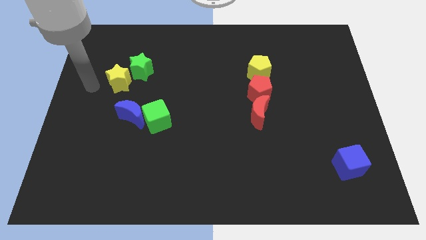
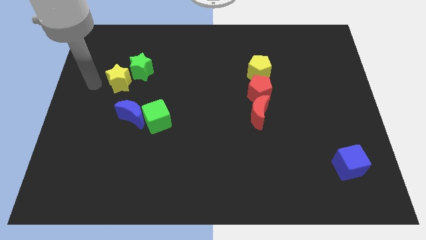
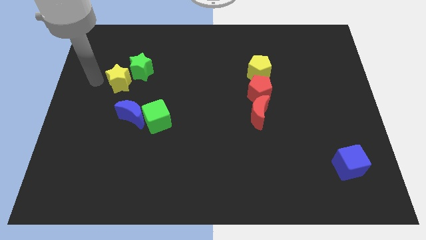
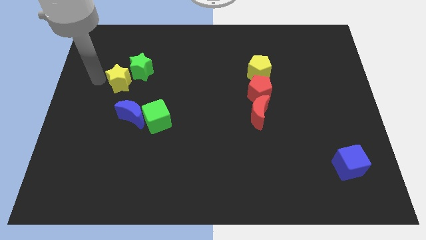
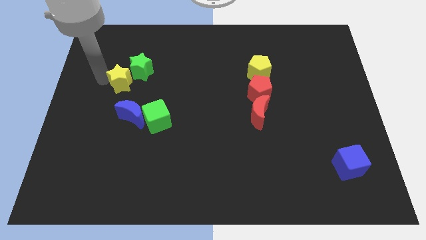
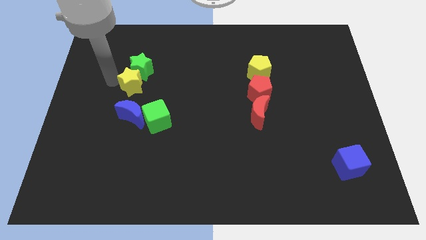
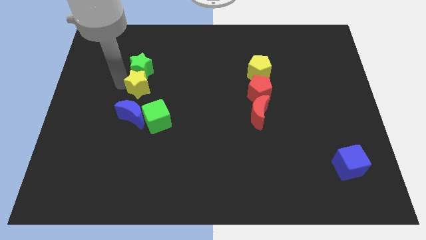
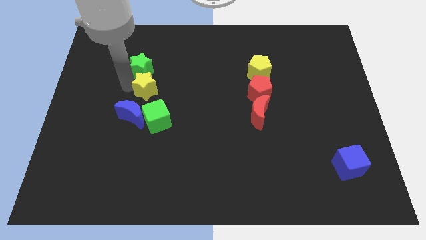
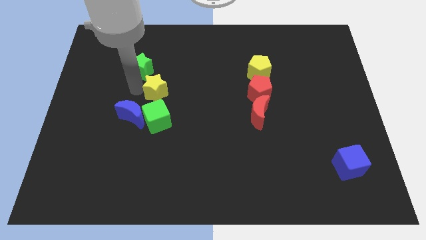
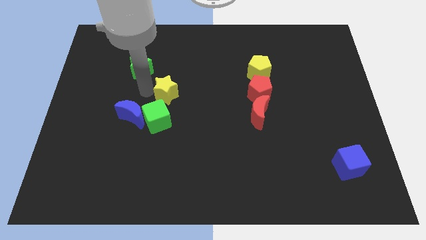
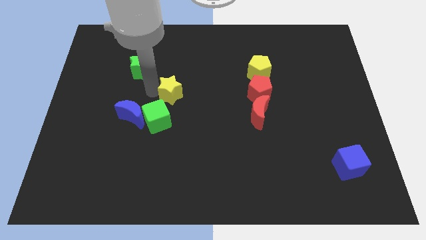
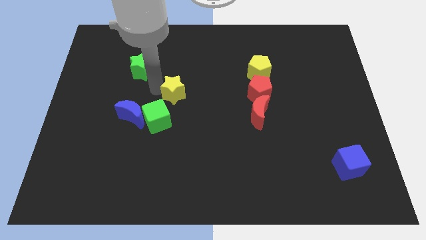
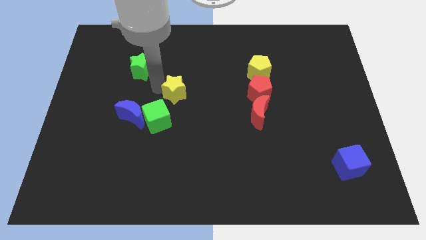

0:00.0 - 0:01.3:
take the yellow star away from the green star

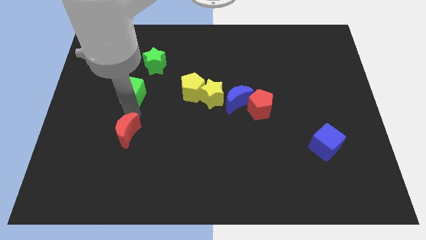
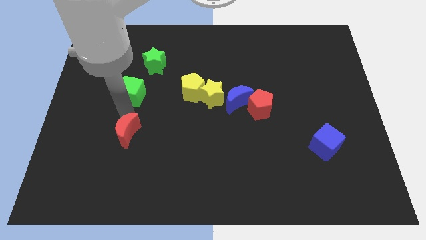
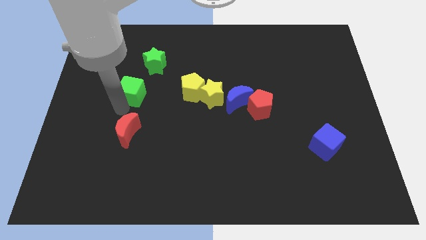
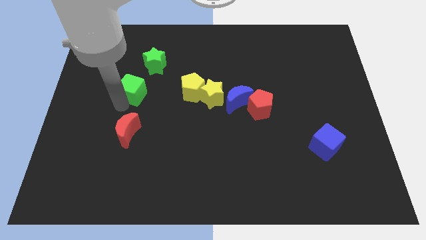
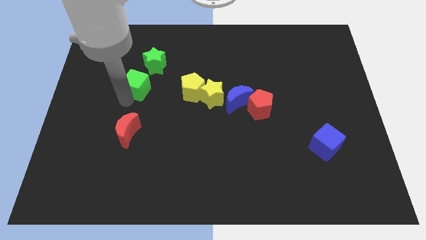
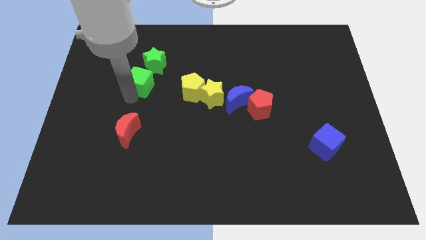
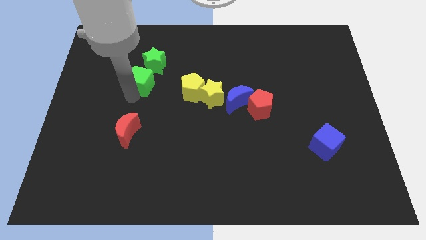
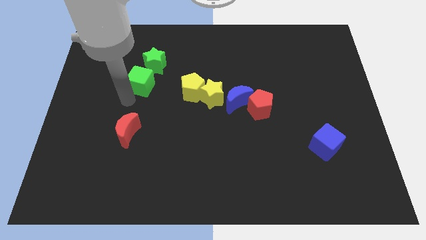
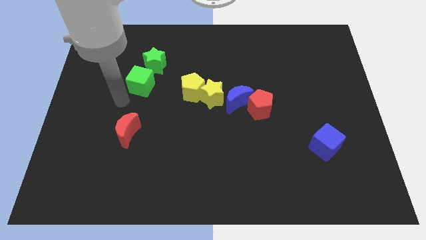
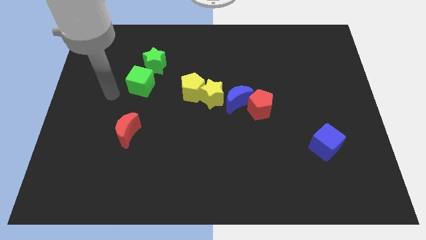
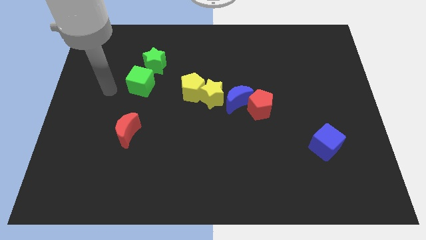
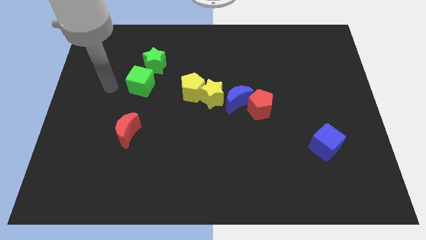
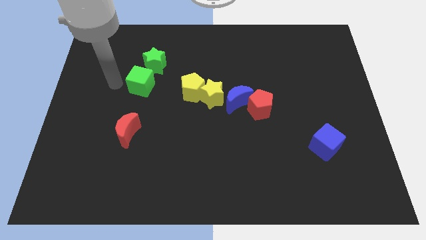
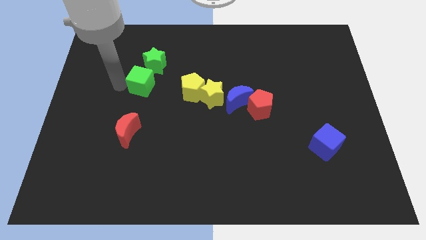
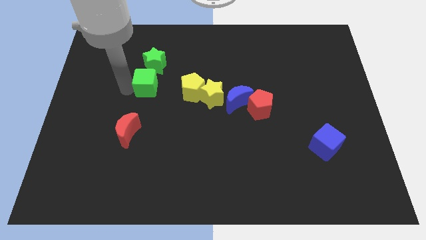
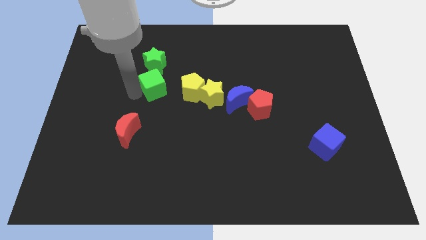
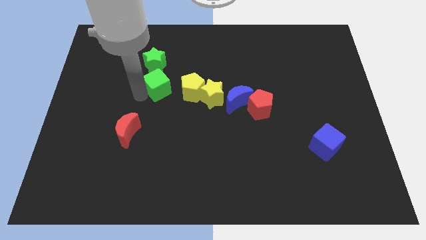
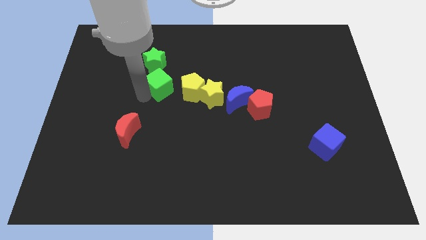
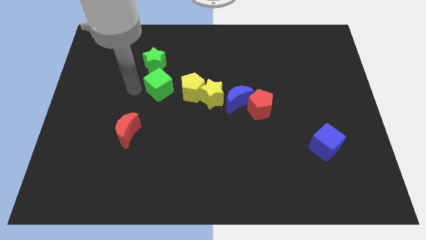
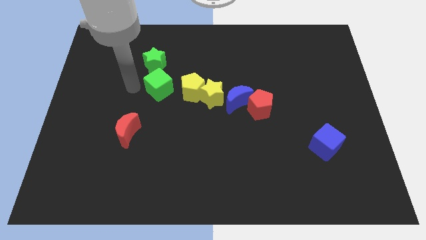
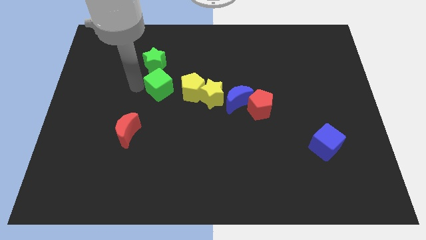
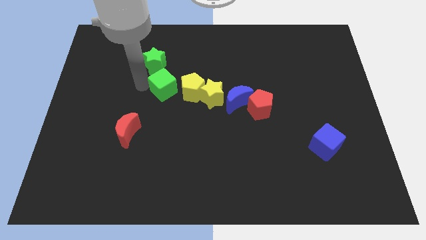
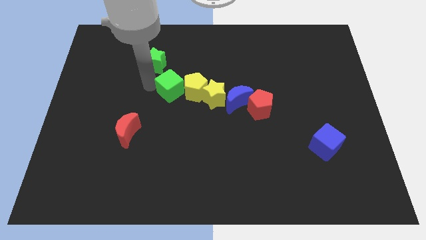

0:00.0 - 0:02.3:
put the green cube in between the yellow pentagon and the green star

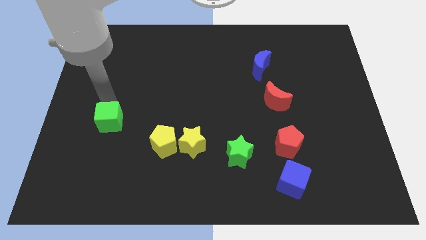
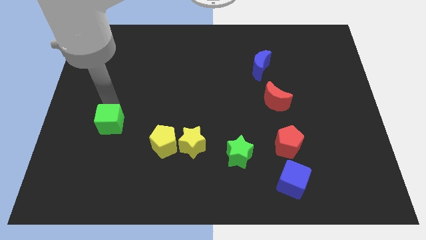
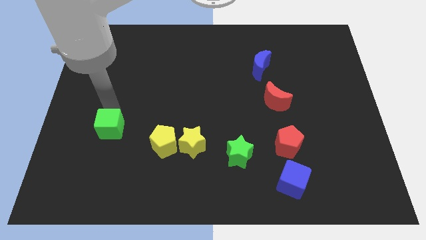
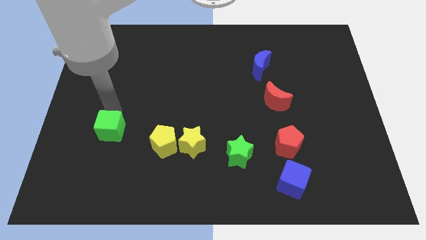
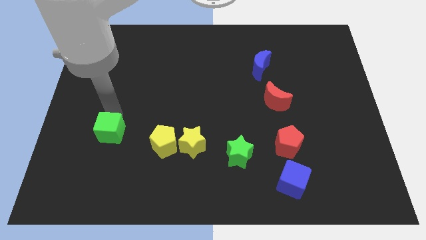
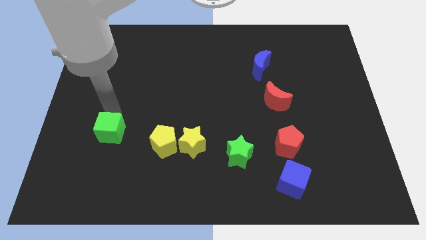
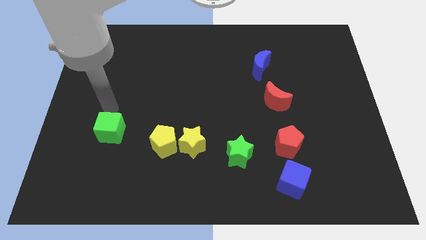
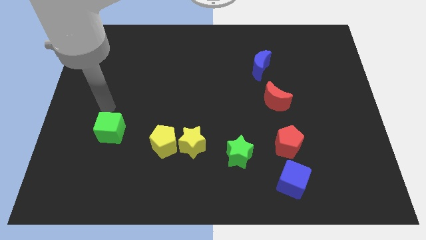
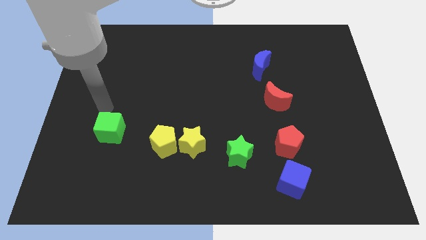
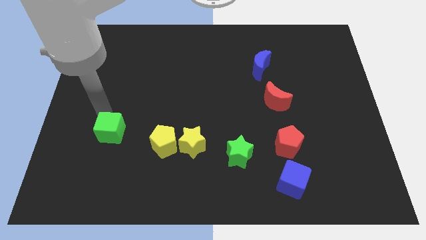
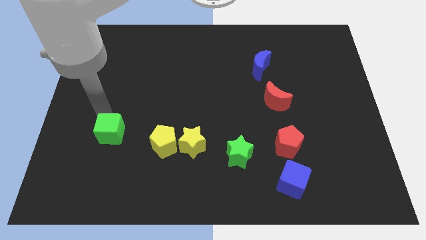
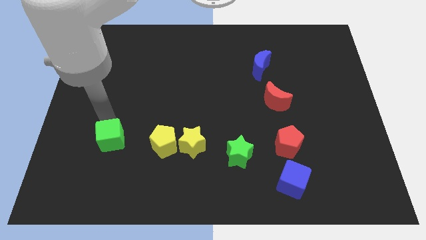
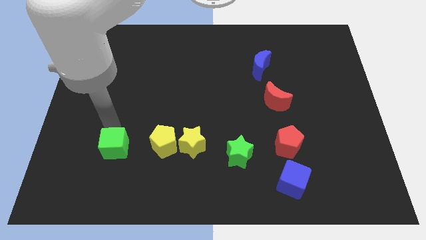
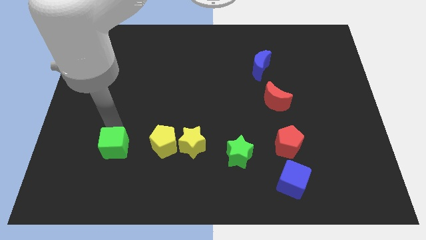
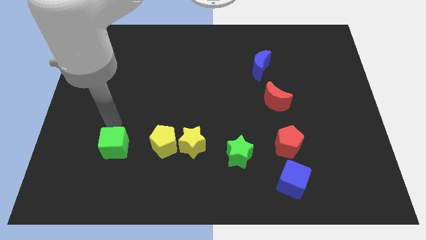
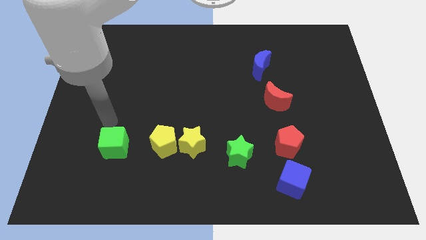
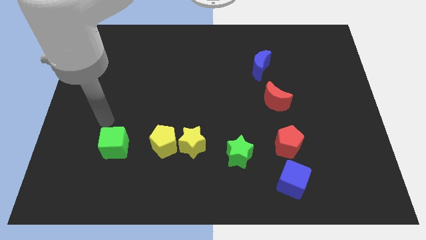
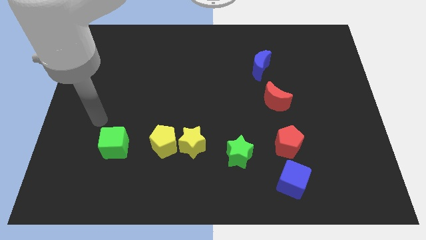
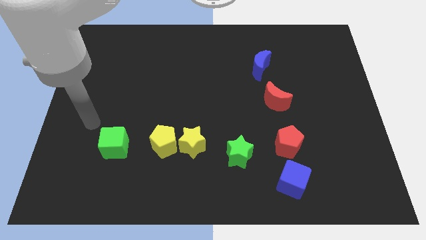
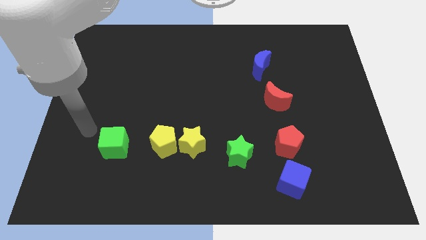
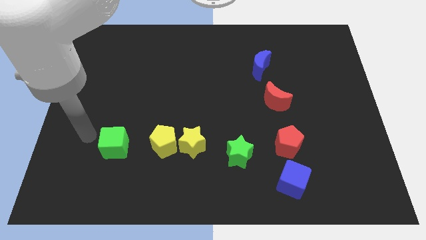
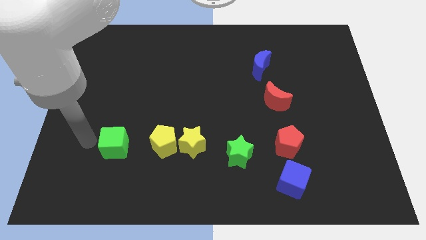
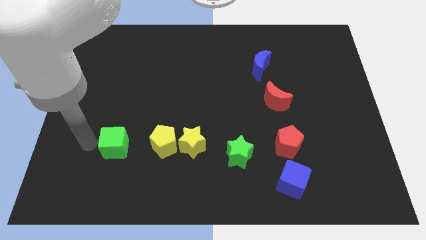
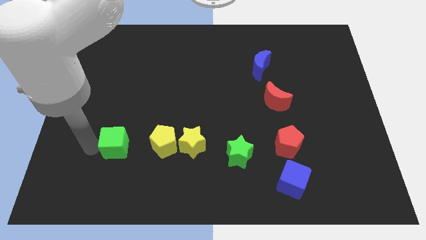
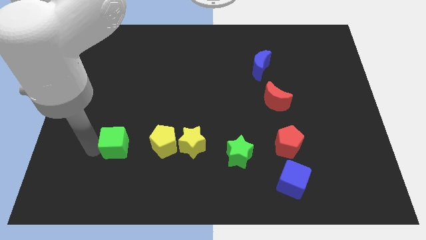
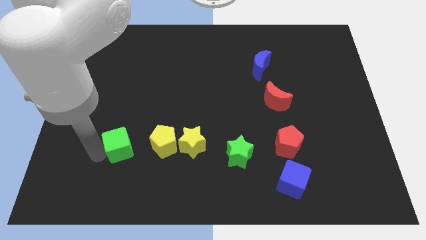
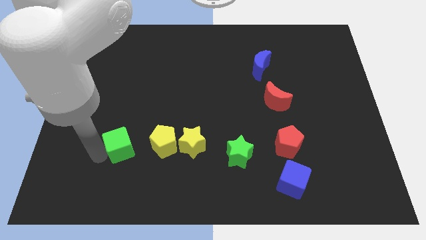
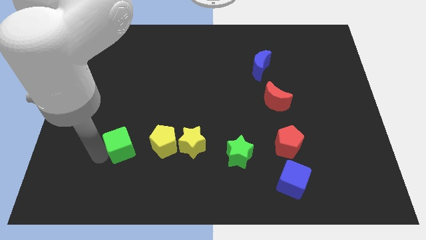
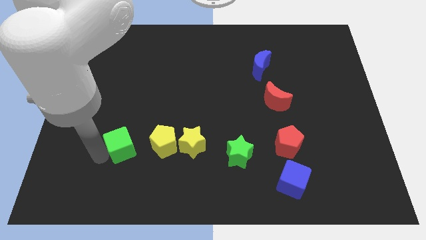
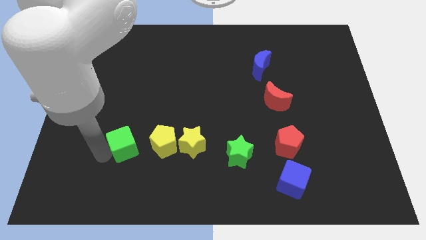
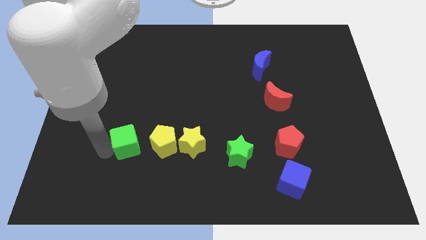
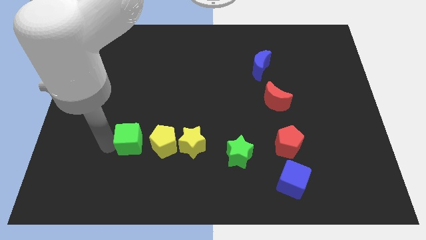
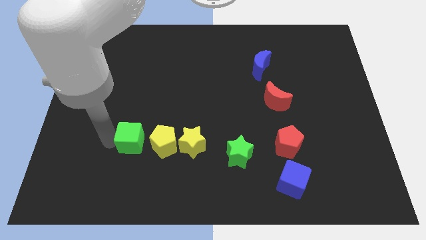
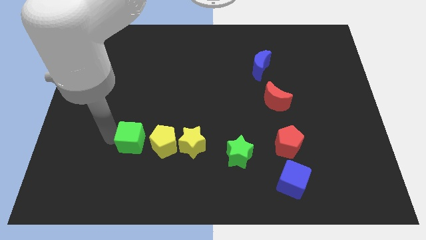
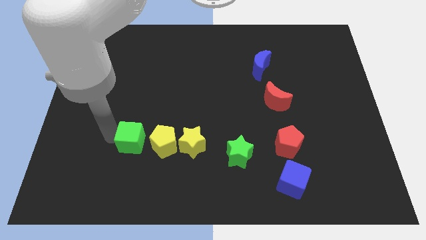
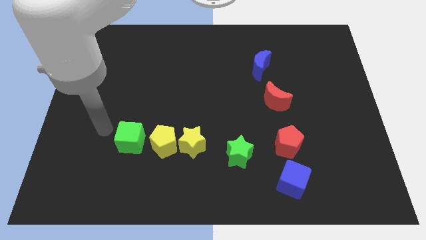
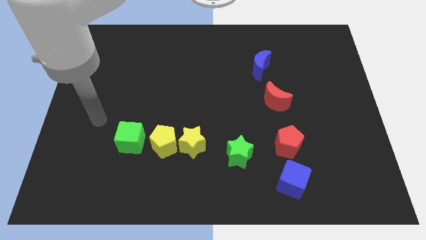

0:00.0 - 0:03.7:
place green cube left to yellow pentagon

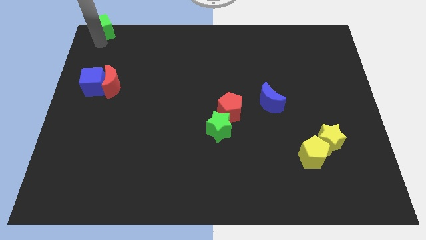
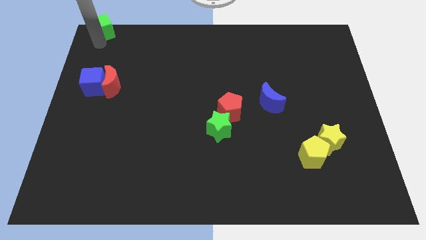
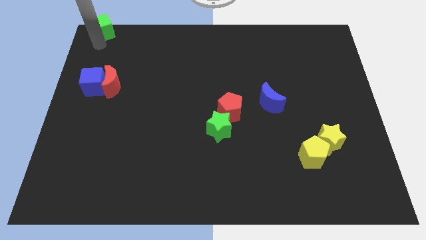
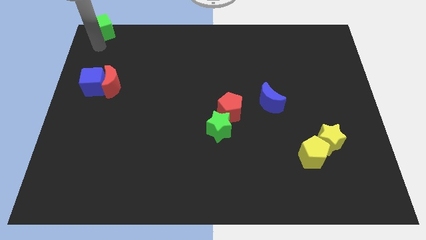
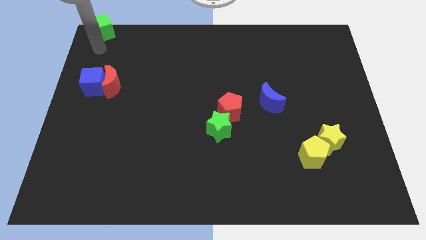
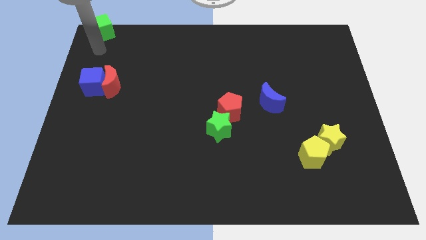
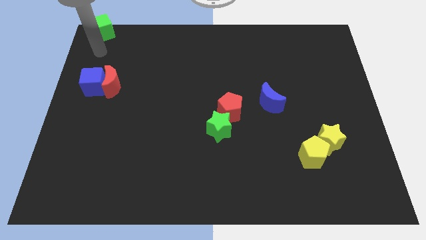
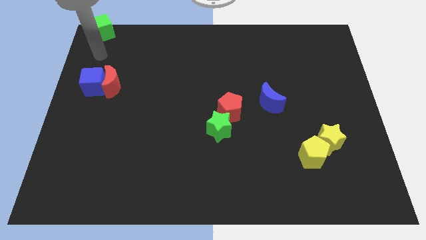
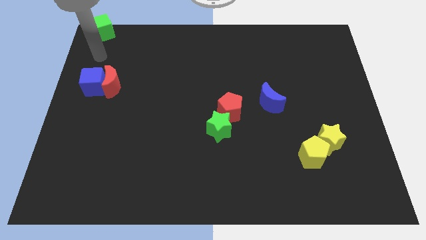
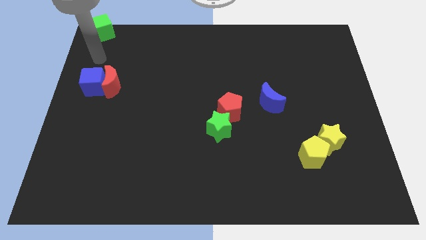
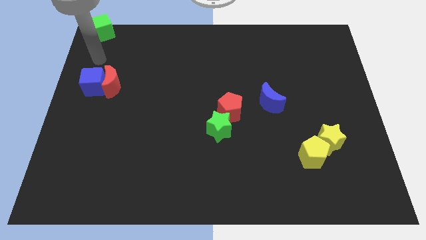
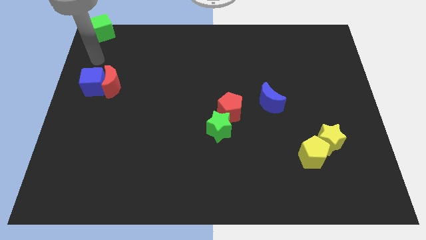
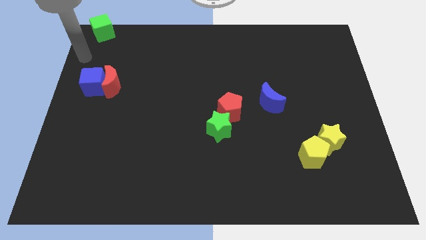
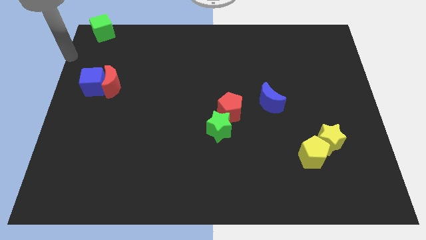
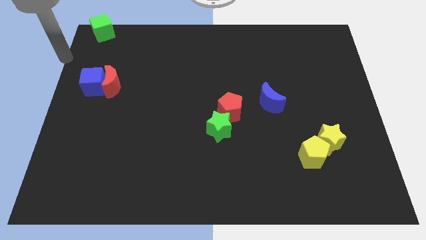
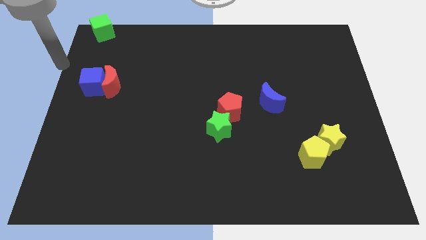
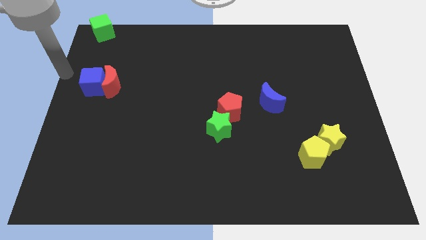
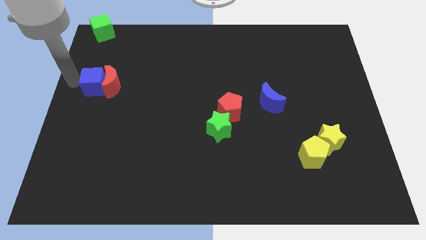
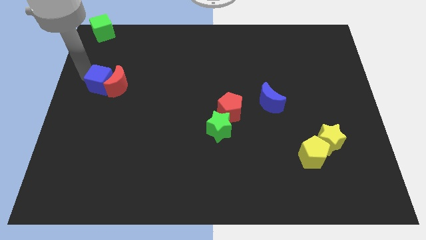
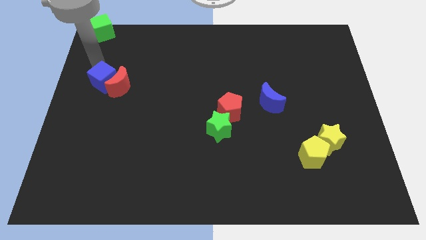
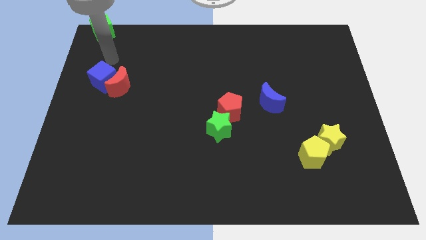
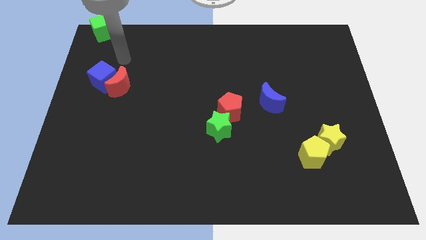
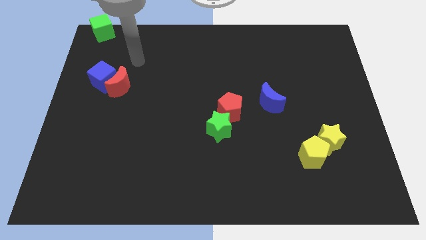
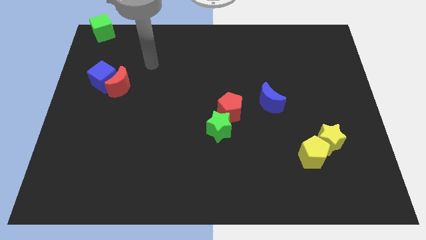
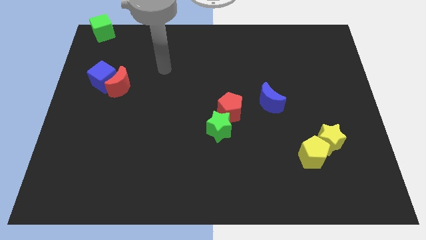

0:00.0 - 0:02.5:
move your arm away from the green cube
